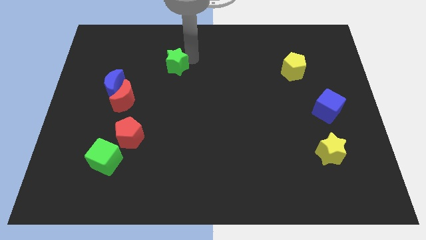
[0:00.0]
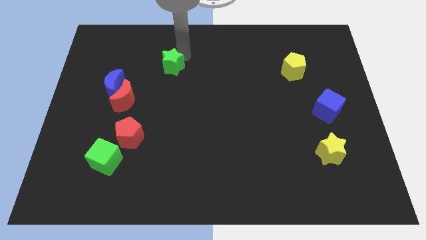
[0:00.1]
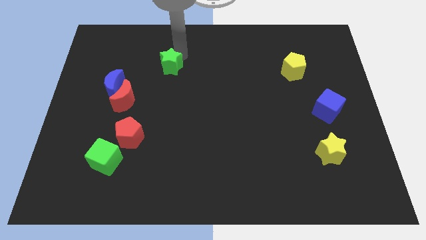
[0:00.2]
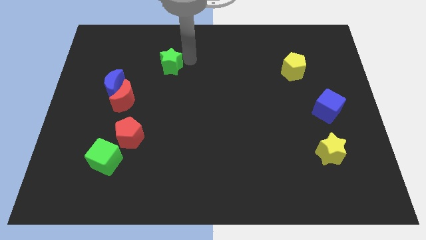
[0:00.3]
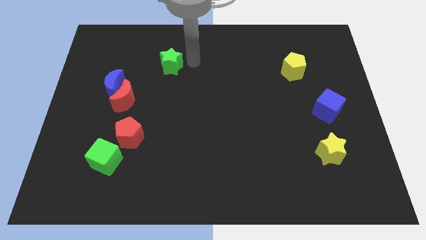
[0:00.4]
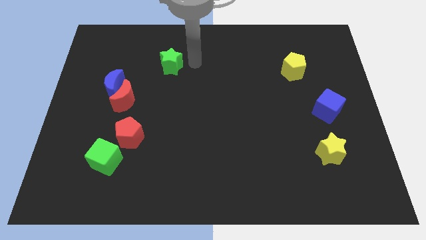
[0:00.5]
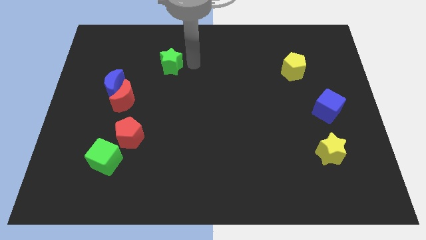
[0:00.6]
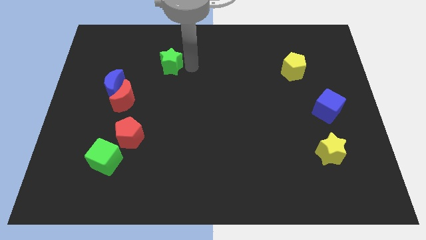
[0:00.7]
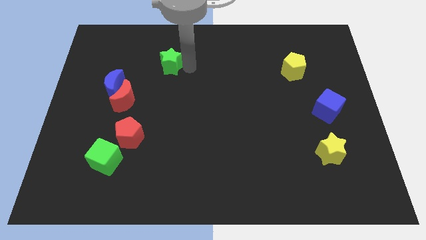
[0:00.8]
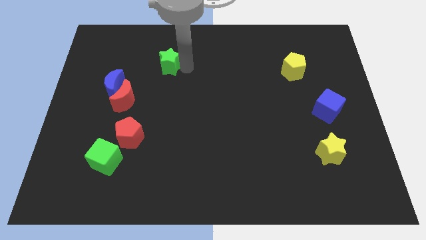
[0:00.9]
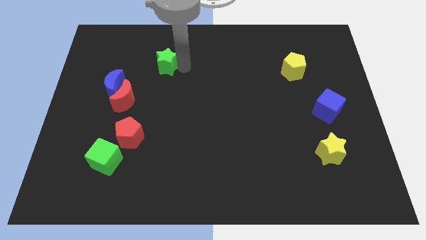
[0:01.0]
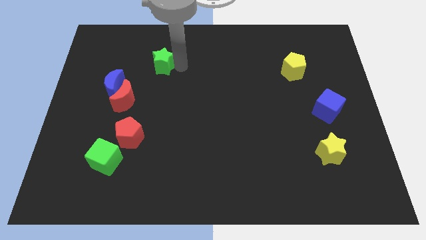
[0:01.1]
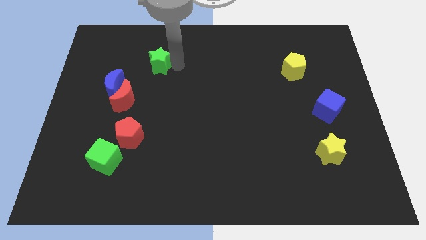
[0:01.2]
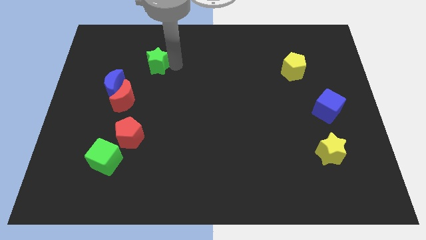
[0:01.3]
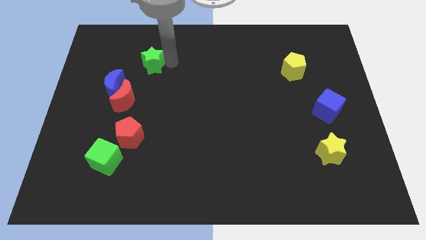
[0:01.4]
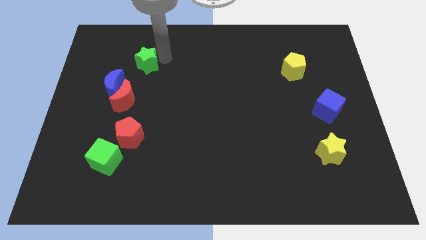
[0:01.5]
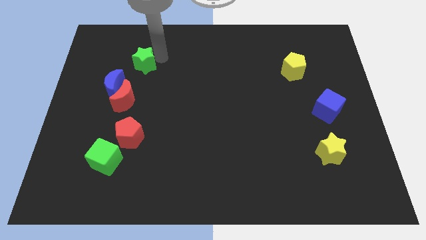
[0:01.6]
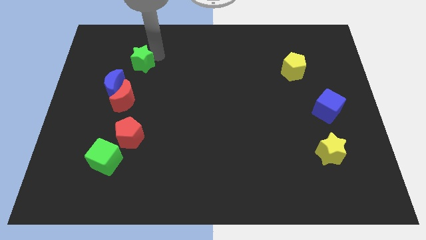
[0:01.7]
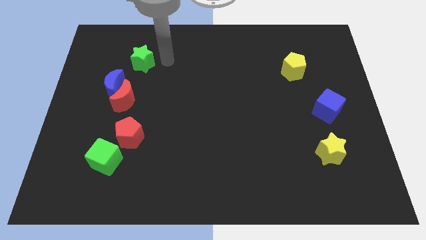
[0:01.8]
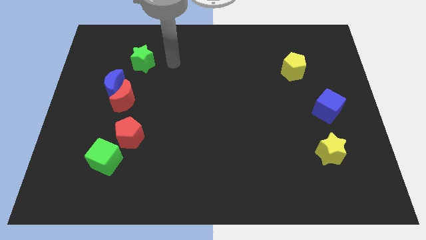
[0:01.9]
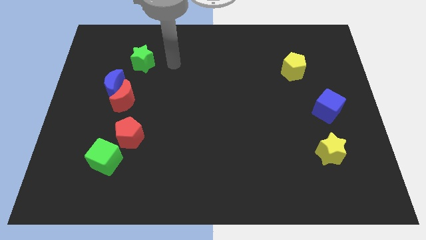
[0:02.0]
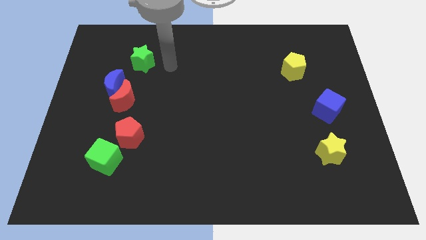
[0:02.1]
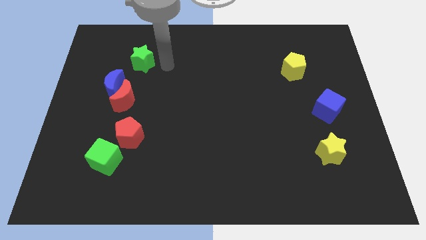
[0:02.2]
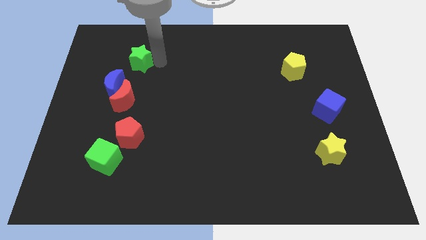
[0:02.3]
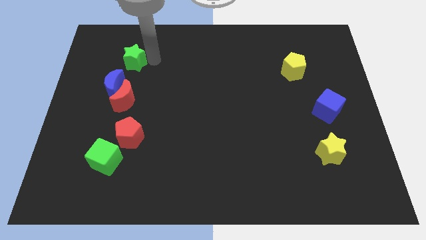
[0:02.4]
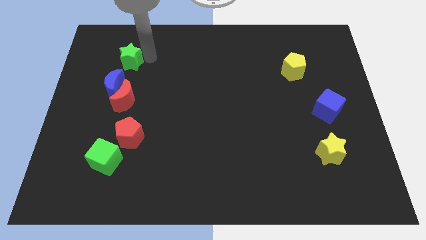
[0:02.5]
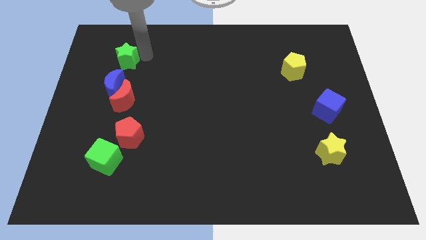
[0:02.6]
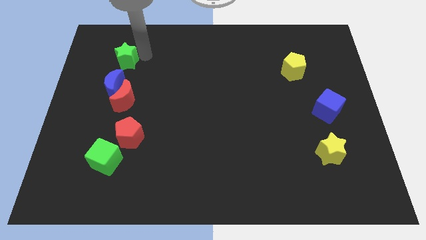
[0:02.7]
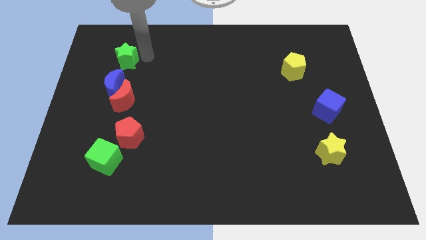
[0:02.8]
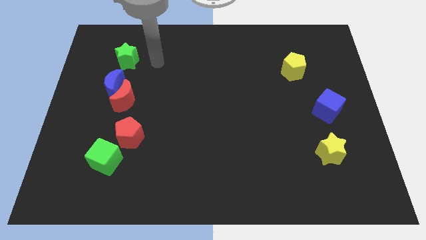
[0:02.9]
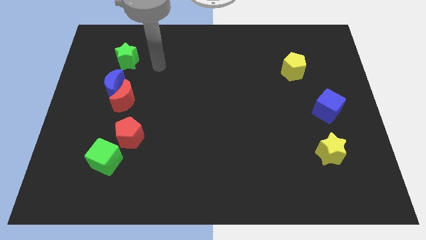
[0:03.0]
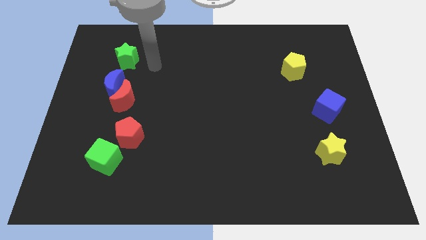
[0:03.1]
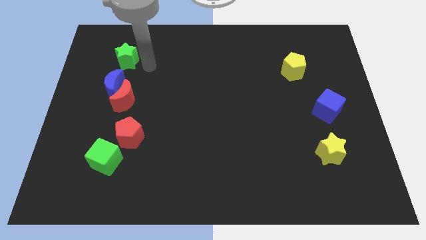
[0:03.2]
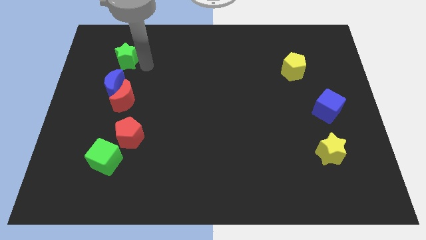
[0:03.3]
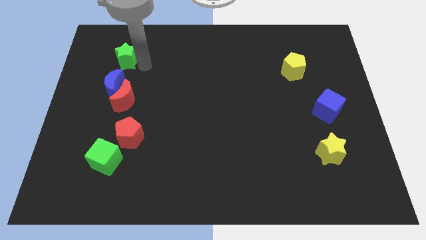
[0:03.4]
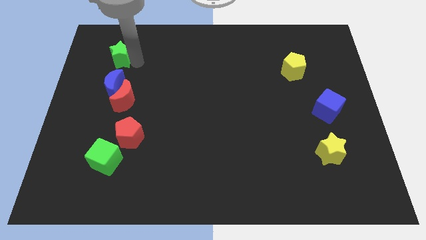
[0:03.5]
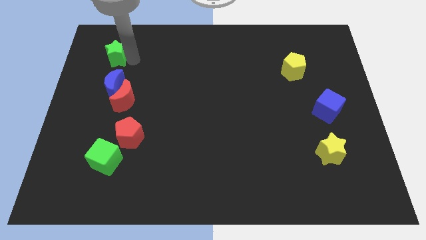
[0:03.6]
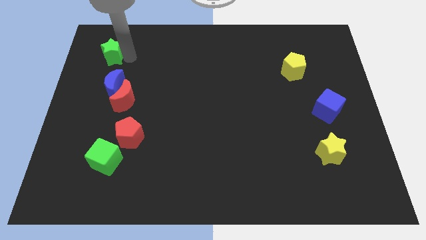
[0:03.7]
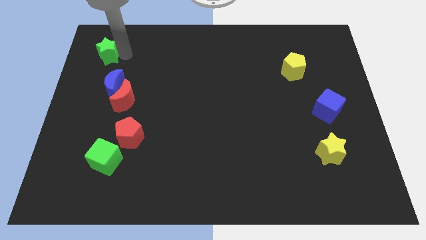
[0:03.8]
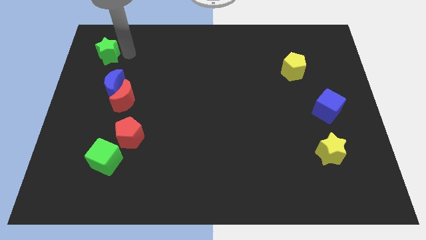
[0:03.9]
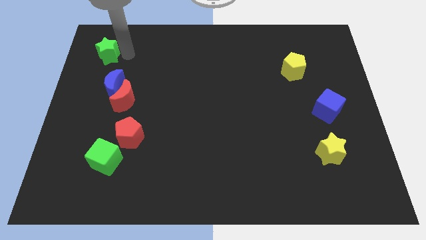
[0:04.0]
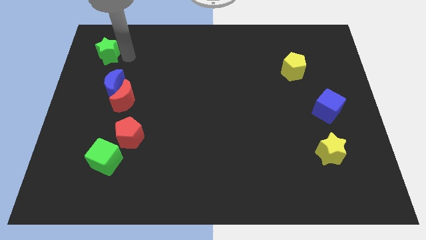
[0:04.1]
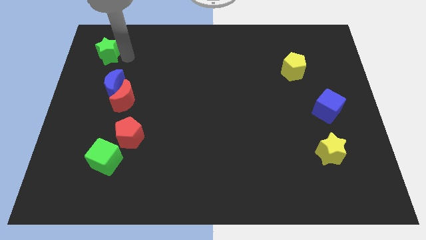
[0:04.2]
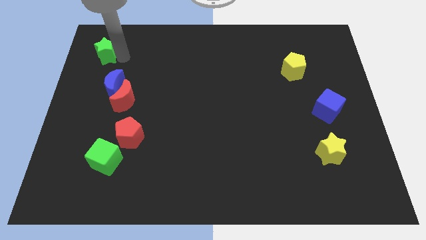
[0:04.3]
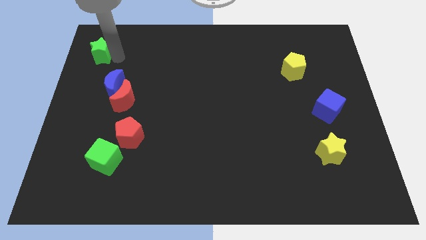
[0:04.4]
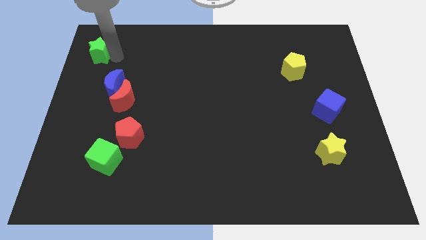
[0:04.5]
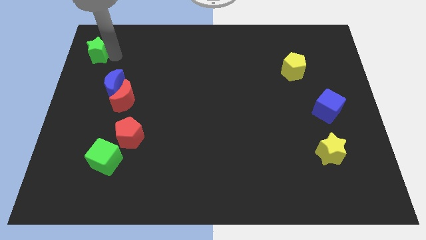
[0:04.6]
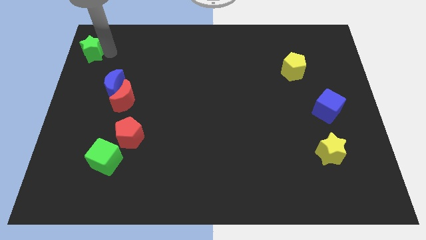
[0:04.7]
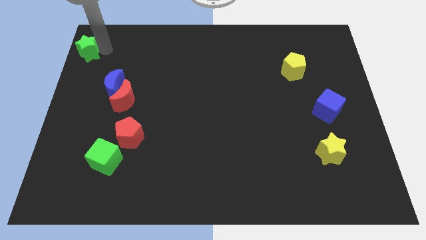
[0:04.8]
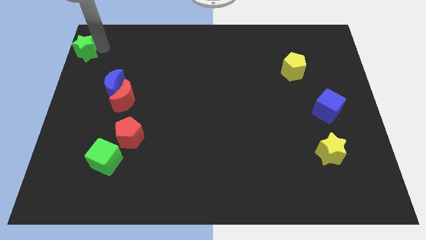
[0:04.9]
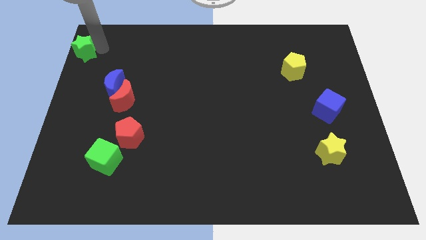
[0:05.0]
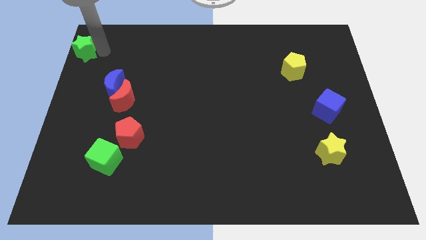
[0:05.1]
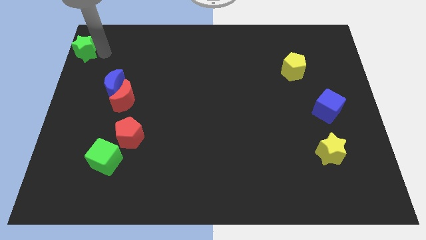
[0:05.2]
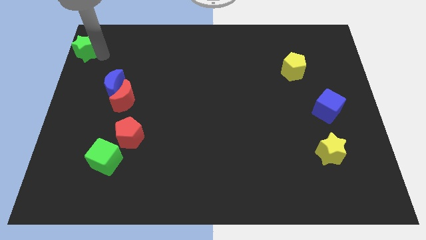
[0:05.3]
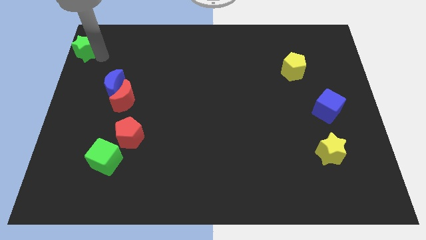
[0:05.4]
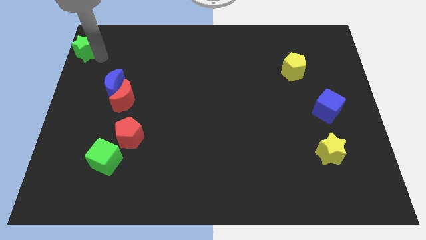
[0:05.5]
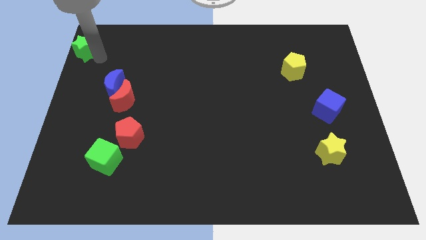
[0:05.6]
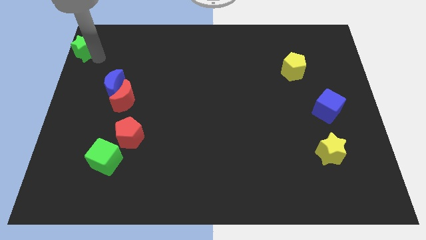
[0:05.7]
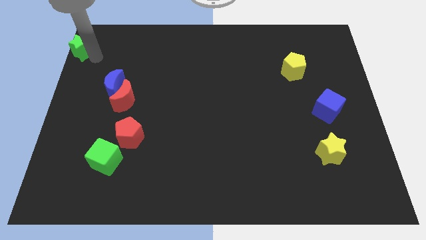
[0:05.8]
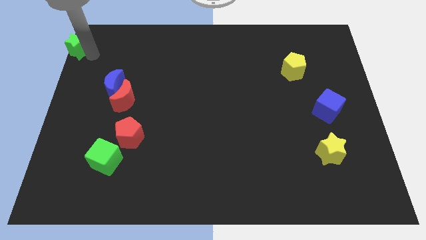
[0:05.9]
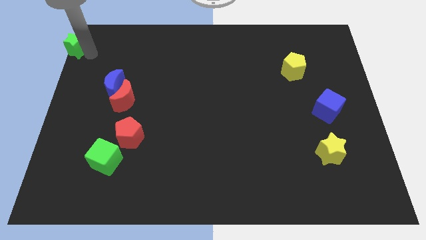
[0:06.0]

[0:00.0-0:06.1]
move the green star to the top left of the board

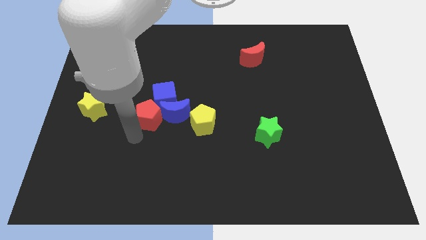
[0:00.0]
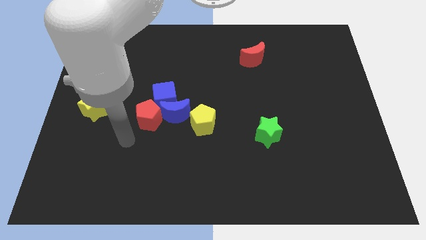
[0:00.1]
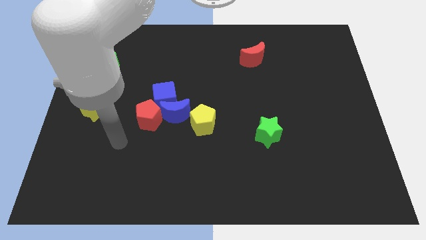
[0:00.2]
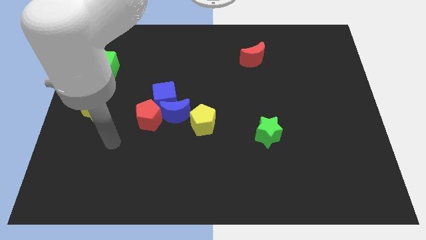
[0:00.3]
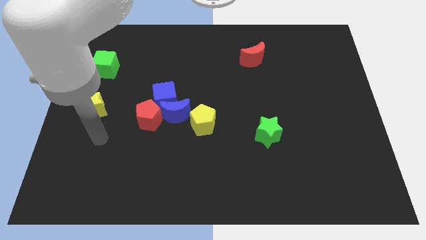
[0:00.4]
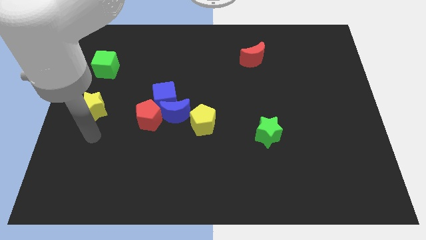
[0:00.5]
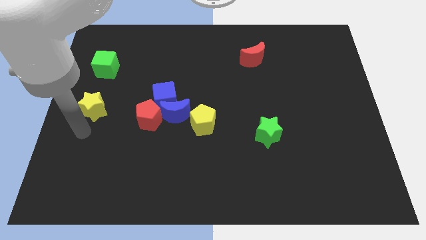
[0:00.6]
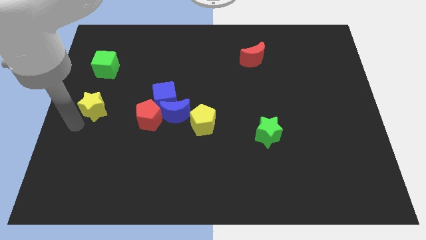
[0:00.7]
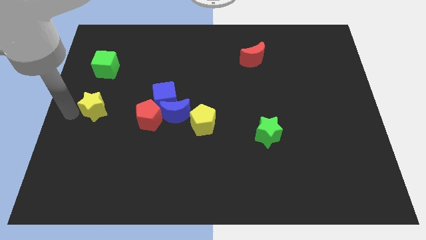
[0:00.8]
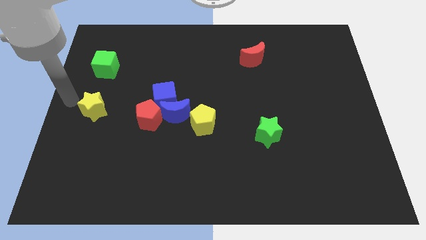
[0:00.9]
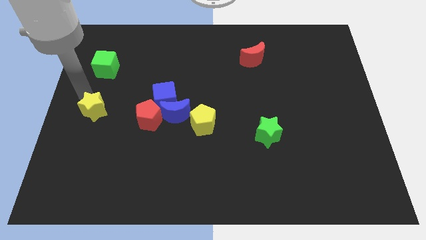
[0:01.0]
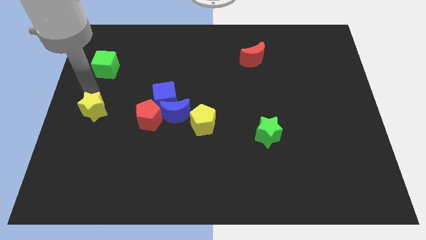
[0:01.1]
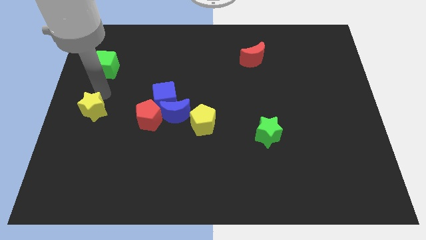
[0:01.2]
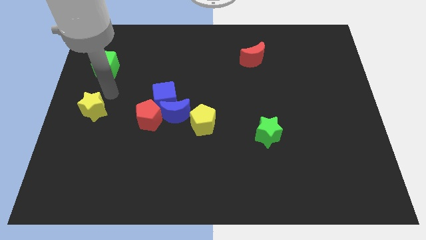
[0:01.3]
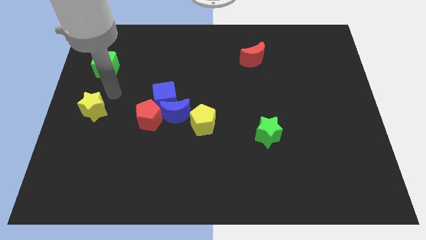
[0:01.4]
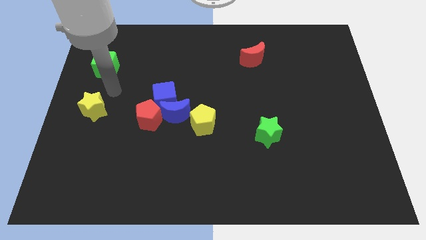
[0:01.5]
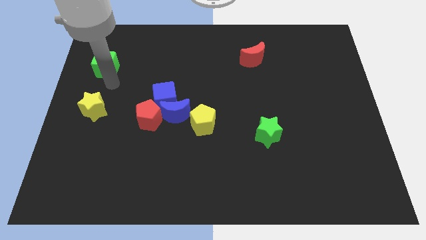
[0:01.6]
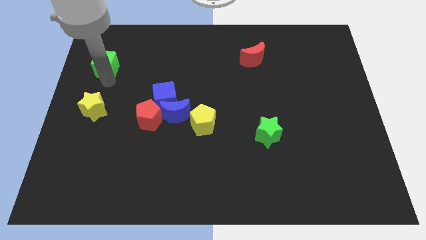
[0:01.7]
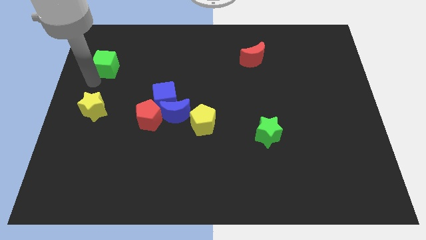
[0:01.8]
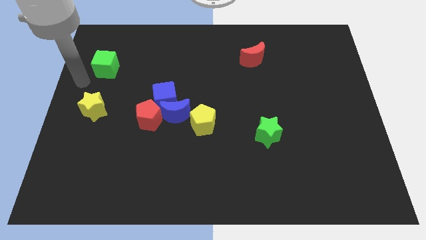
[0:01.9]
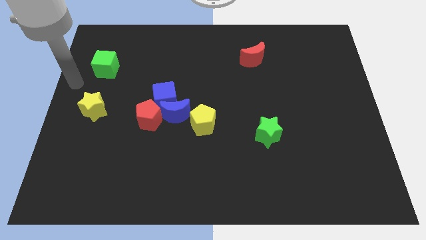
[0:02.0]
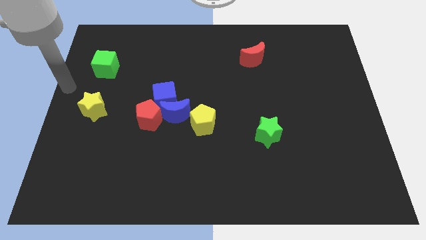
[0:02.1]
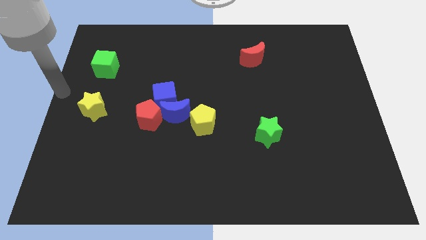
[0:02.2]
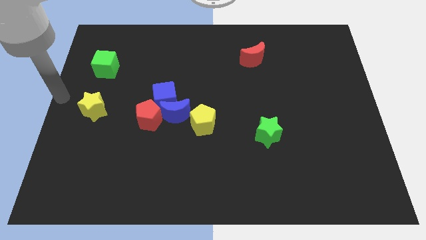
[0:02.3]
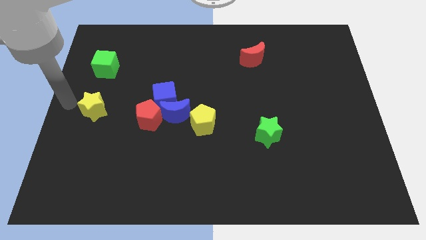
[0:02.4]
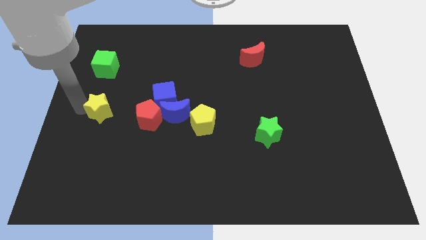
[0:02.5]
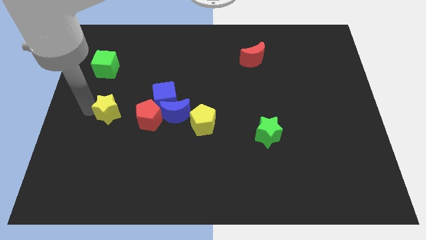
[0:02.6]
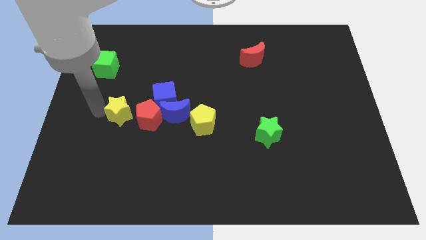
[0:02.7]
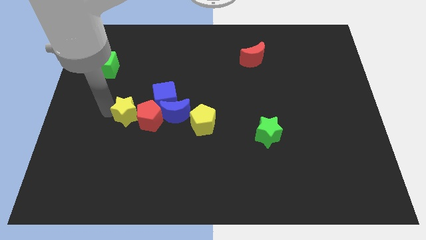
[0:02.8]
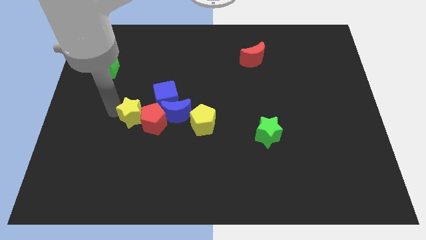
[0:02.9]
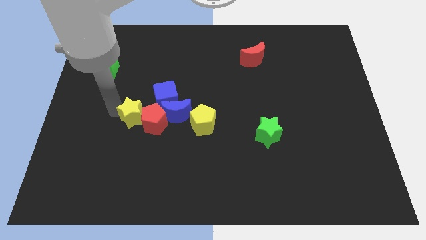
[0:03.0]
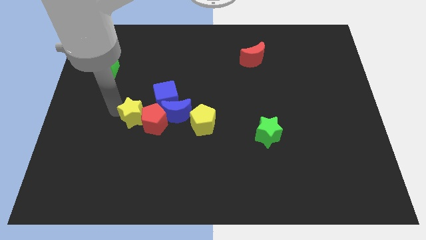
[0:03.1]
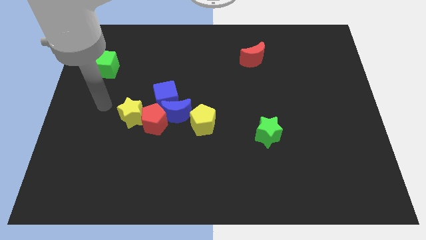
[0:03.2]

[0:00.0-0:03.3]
place the yellow star to the left of the red pentagon
